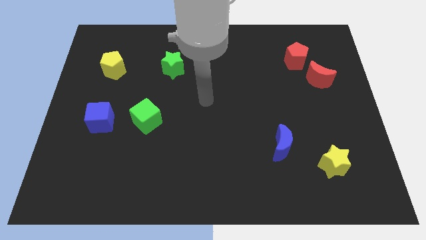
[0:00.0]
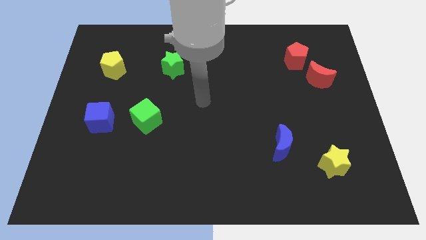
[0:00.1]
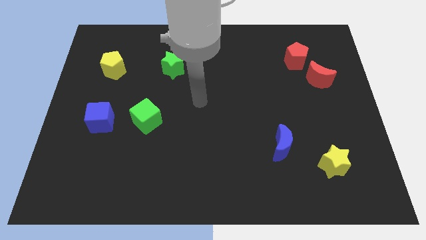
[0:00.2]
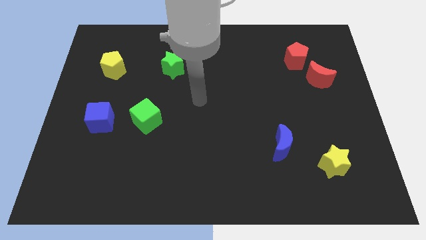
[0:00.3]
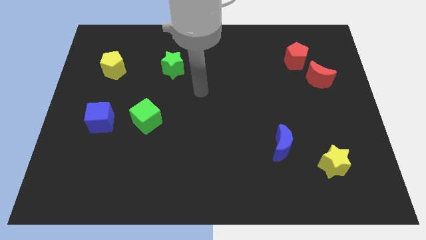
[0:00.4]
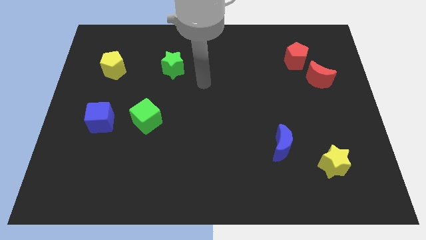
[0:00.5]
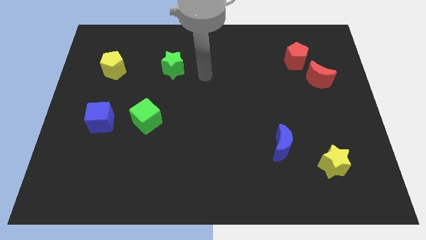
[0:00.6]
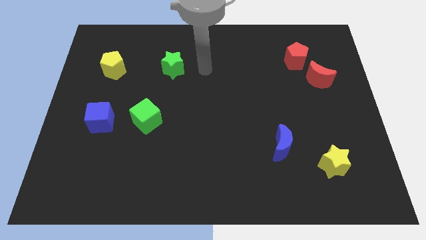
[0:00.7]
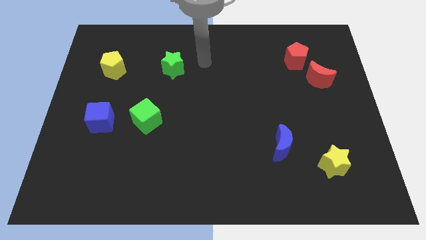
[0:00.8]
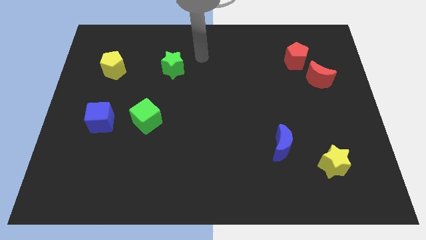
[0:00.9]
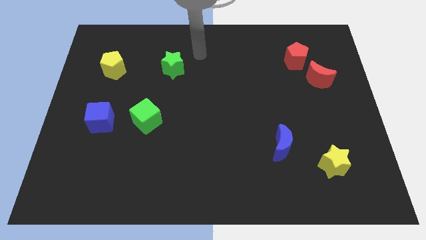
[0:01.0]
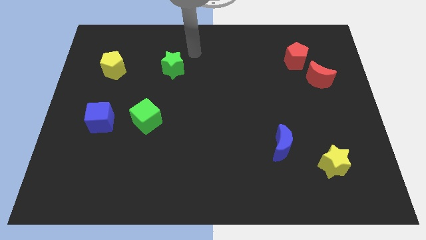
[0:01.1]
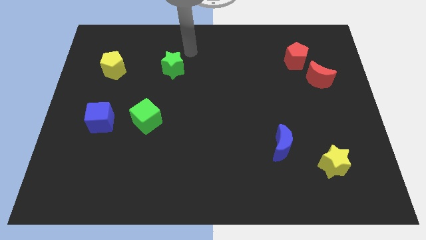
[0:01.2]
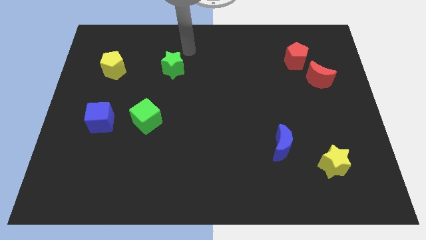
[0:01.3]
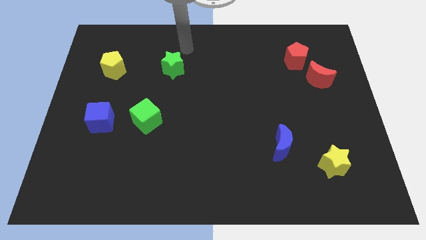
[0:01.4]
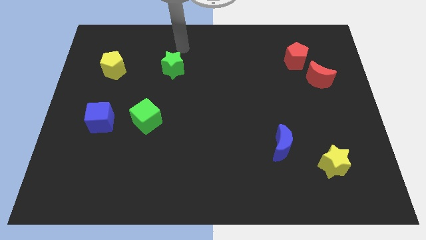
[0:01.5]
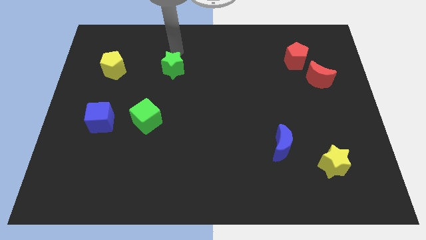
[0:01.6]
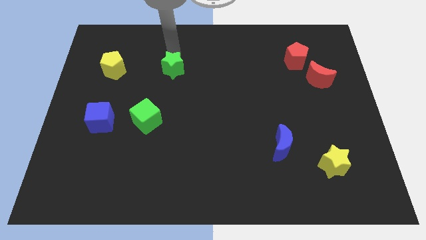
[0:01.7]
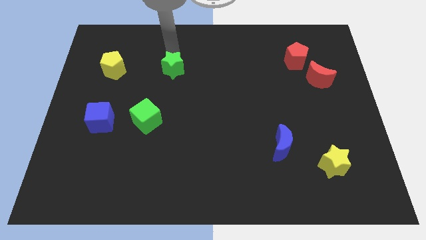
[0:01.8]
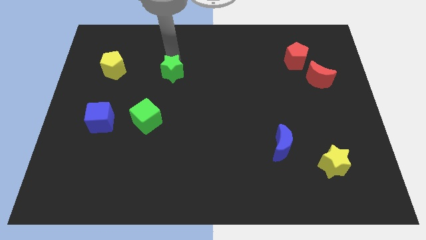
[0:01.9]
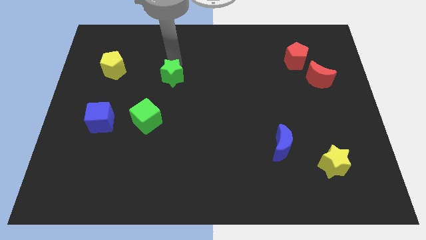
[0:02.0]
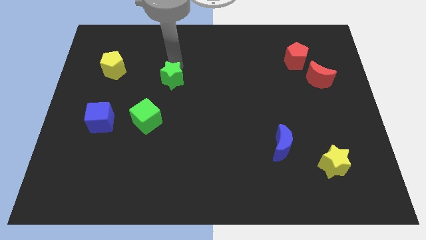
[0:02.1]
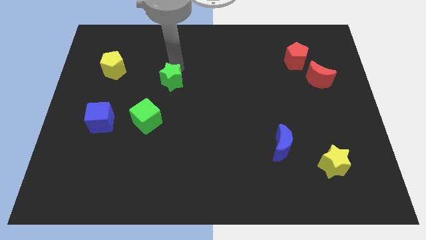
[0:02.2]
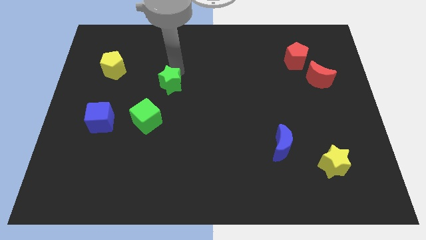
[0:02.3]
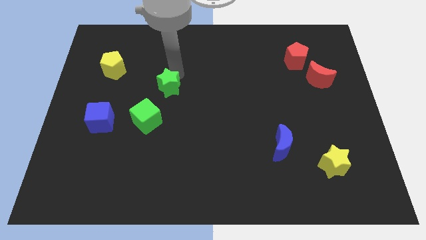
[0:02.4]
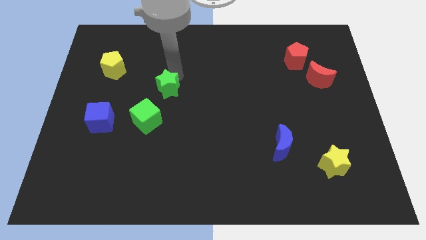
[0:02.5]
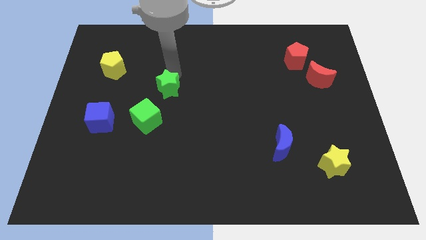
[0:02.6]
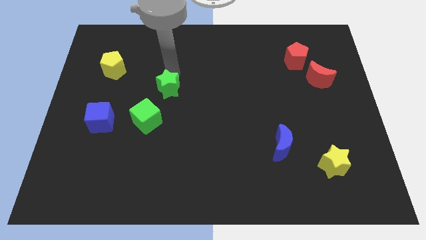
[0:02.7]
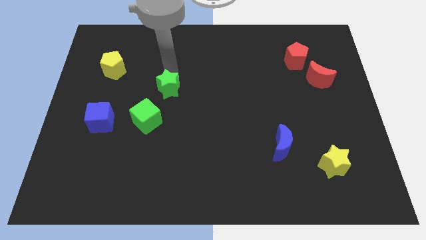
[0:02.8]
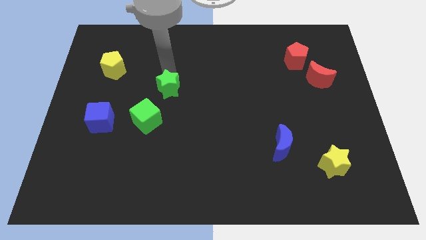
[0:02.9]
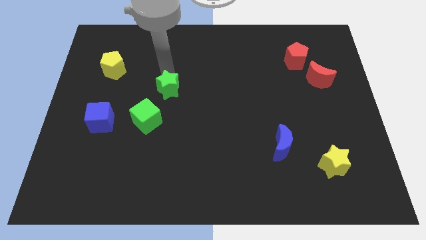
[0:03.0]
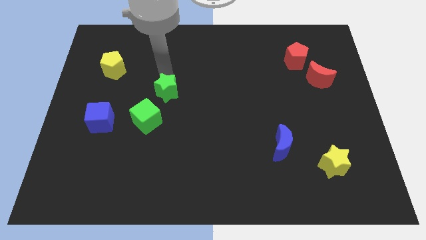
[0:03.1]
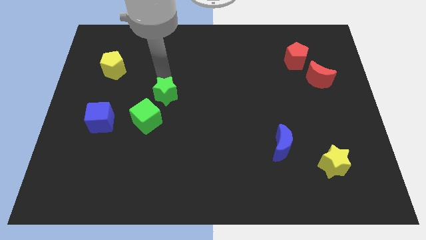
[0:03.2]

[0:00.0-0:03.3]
move the green star downwards to the top right side of the green cube

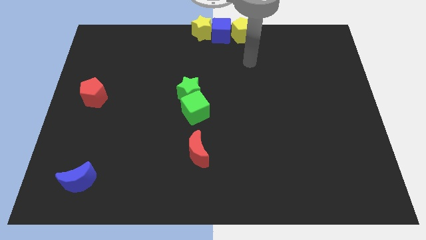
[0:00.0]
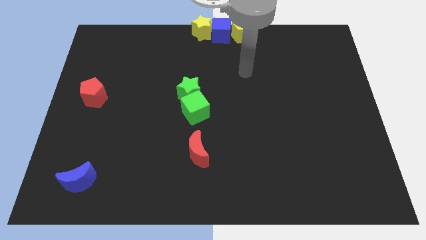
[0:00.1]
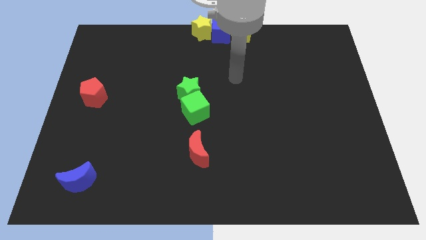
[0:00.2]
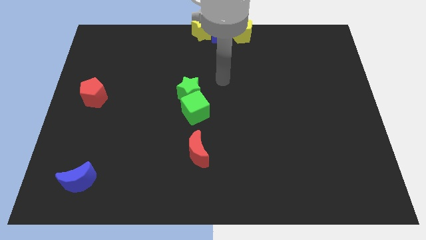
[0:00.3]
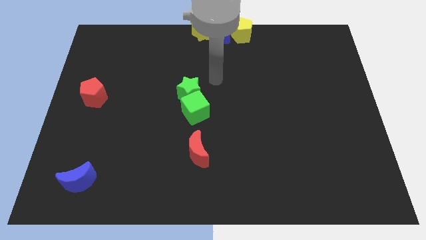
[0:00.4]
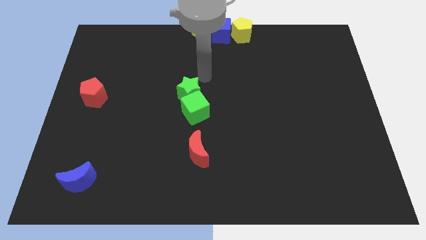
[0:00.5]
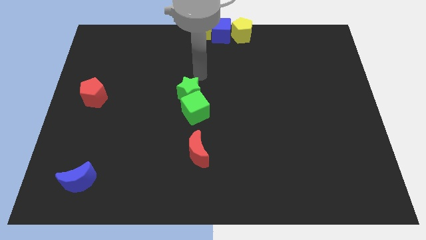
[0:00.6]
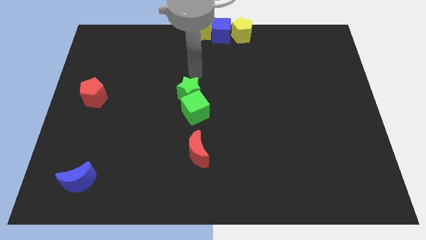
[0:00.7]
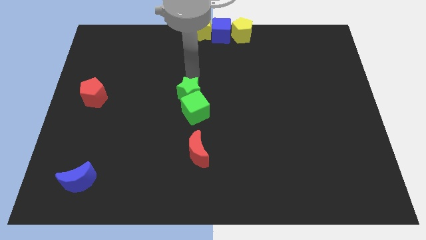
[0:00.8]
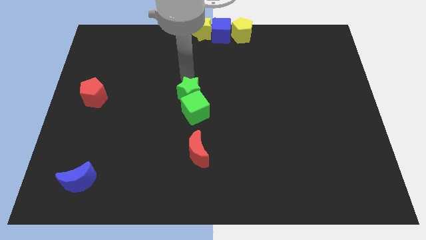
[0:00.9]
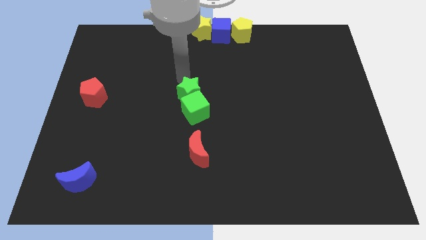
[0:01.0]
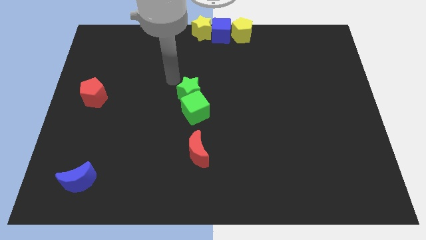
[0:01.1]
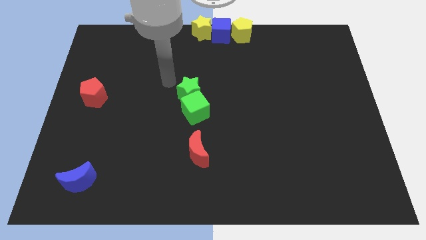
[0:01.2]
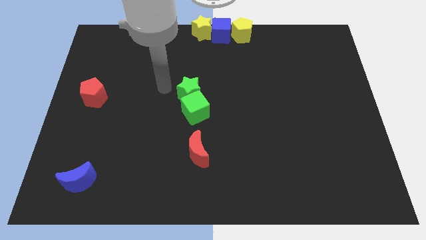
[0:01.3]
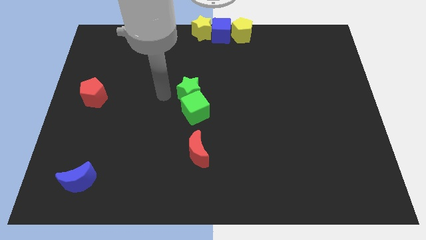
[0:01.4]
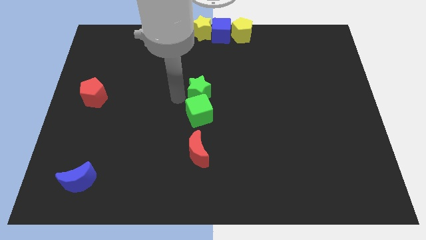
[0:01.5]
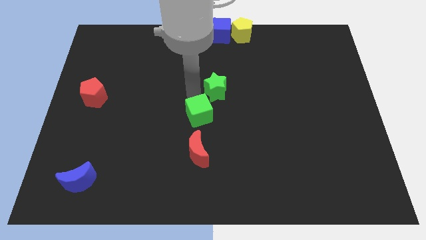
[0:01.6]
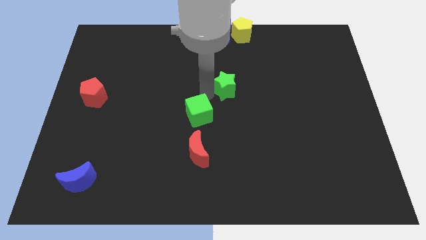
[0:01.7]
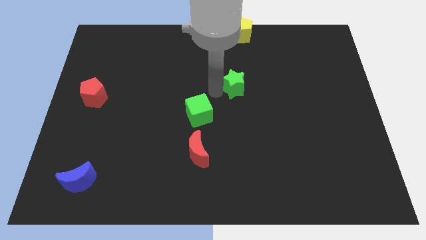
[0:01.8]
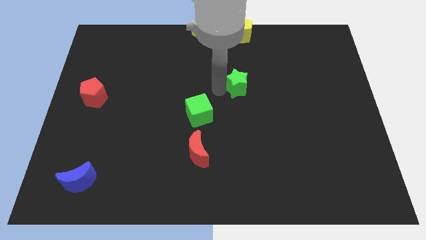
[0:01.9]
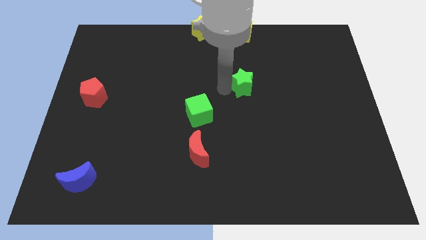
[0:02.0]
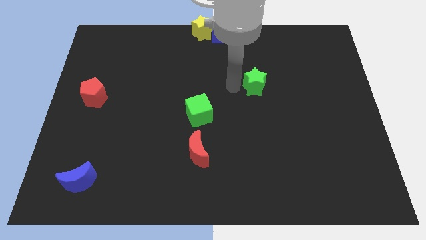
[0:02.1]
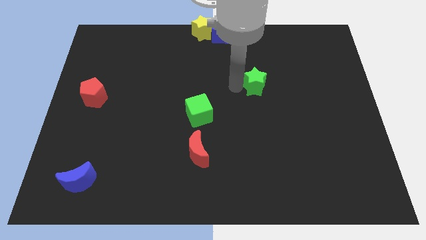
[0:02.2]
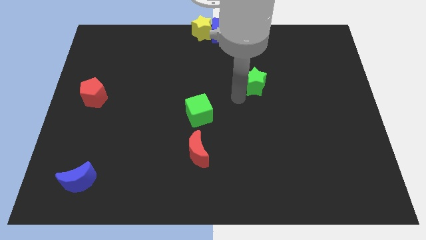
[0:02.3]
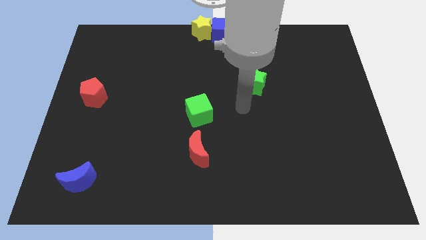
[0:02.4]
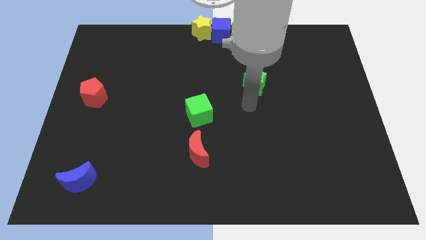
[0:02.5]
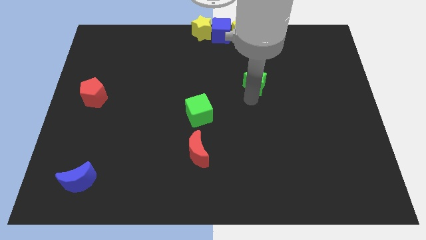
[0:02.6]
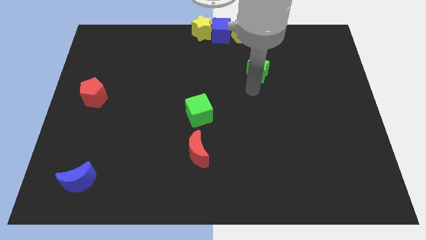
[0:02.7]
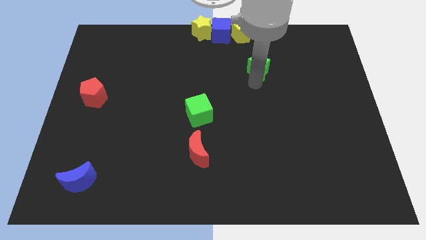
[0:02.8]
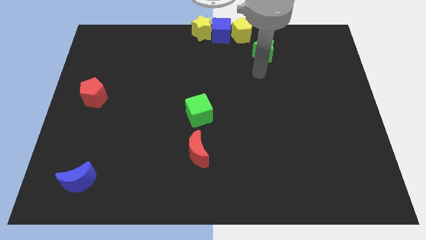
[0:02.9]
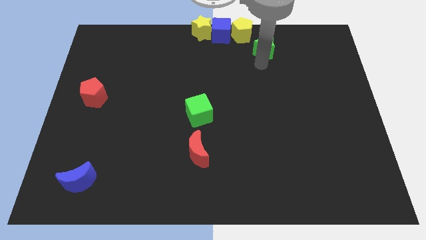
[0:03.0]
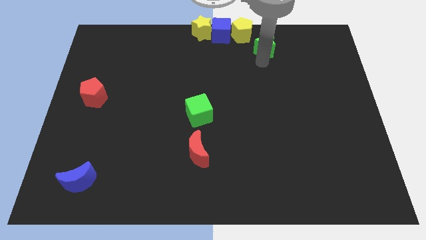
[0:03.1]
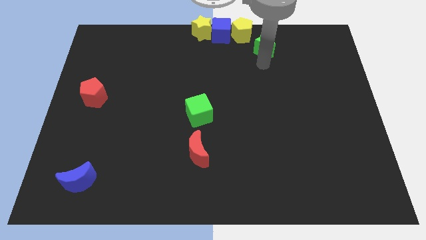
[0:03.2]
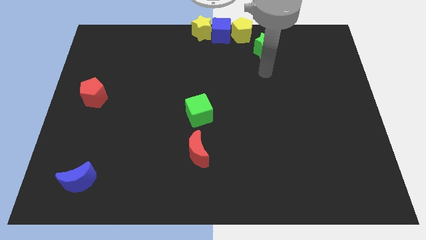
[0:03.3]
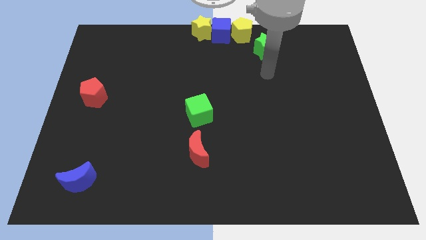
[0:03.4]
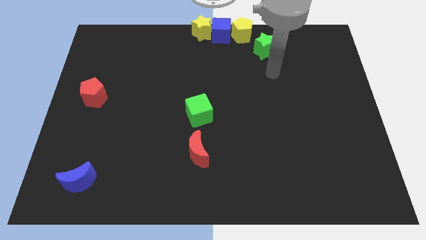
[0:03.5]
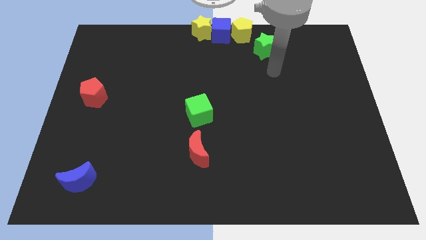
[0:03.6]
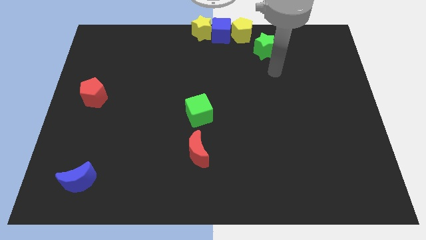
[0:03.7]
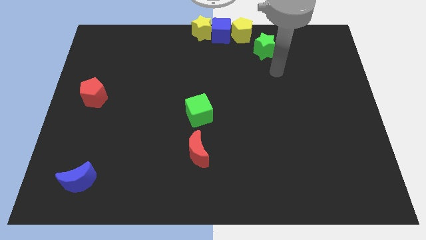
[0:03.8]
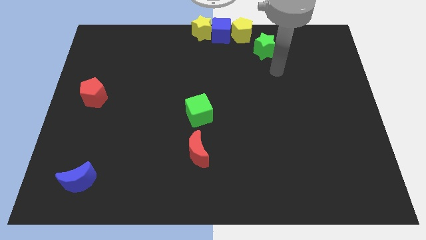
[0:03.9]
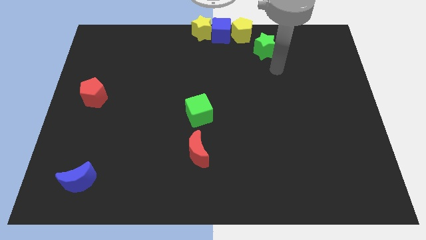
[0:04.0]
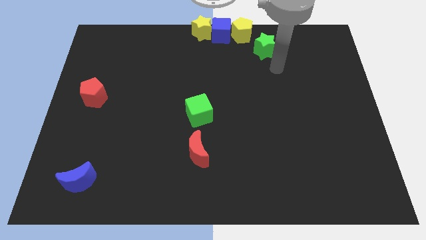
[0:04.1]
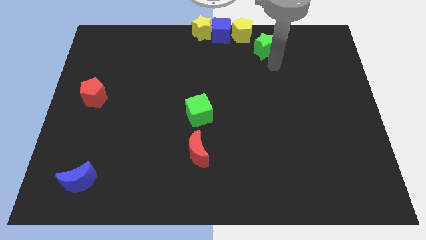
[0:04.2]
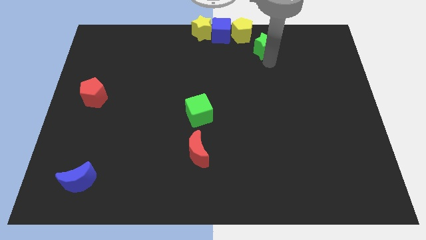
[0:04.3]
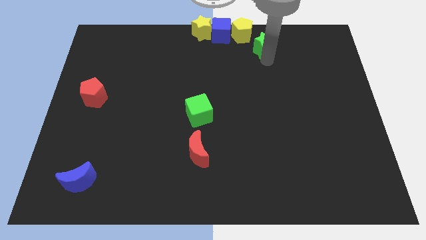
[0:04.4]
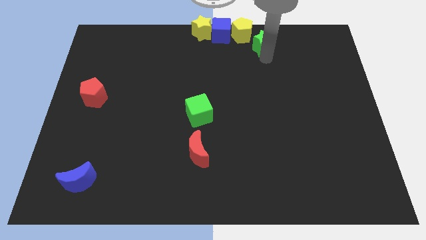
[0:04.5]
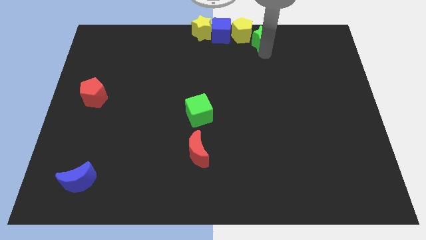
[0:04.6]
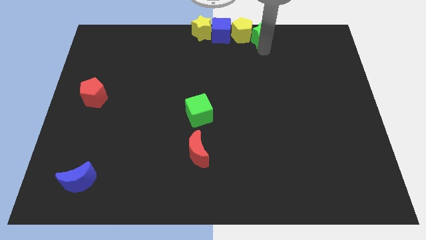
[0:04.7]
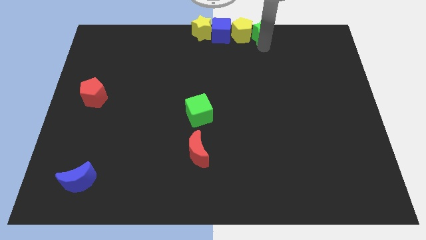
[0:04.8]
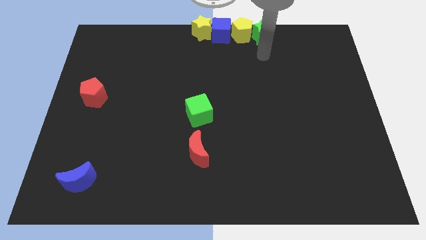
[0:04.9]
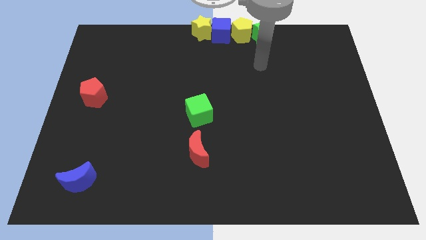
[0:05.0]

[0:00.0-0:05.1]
place the green star to the right of the yellow pentagon

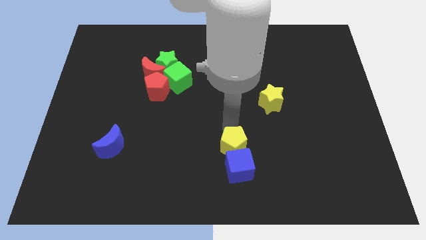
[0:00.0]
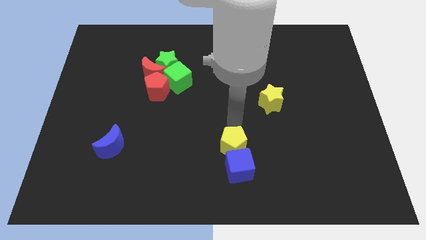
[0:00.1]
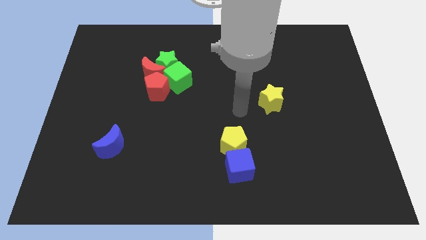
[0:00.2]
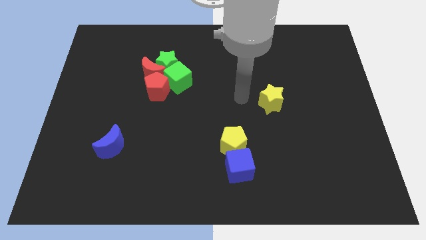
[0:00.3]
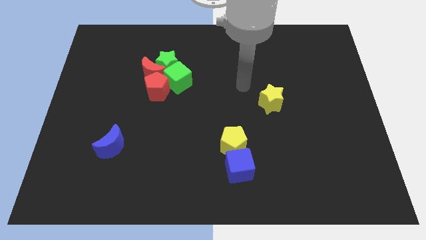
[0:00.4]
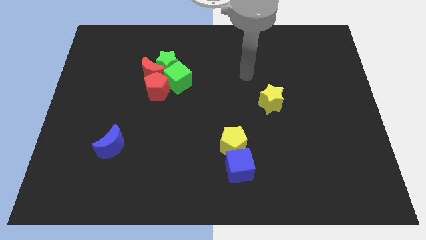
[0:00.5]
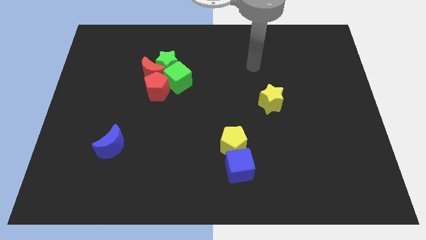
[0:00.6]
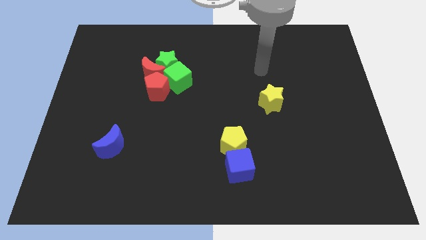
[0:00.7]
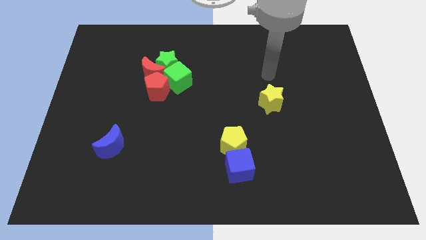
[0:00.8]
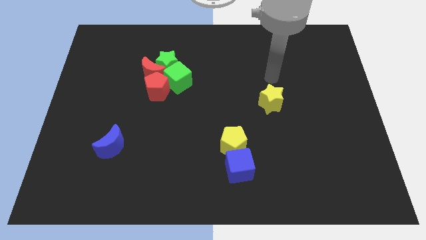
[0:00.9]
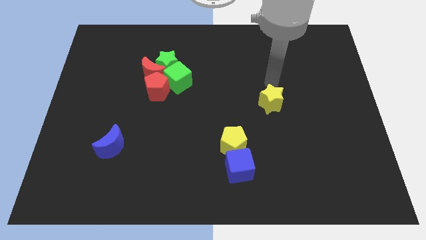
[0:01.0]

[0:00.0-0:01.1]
move away from the yellow pentagon
